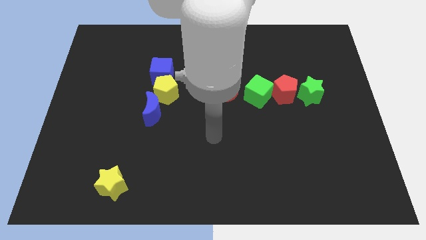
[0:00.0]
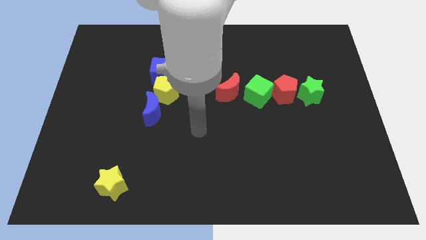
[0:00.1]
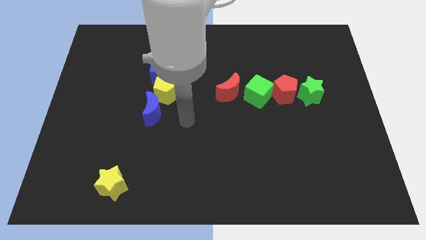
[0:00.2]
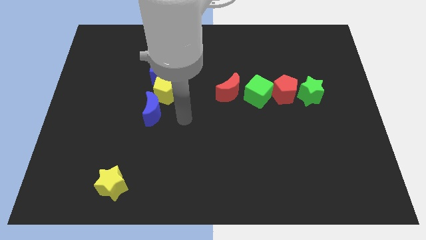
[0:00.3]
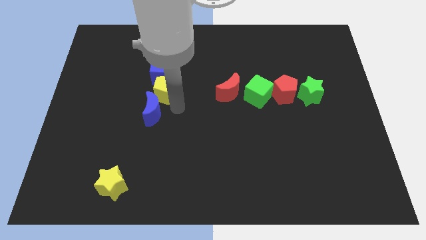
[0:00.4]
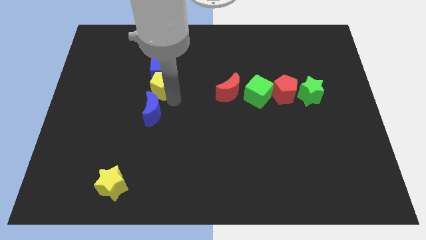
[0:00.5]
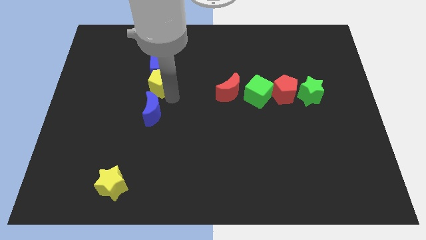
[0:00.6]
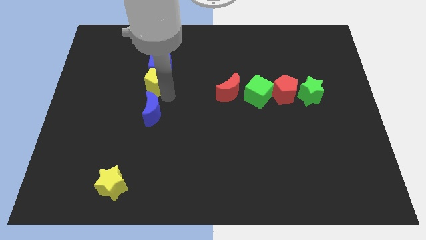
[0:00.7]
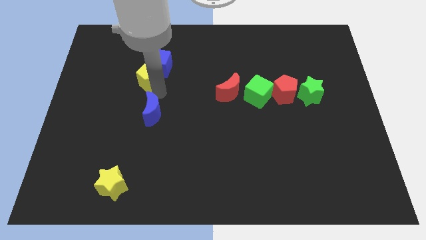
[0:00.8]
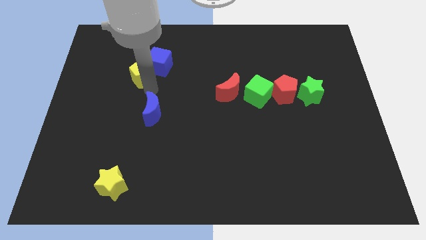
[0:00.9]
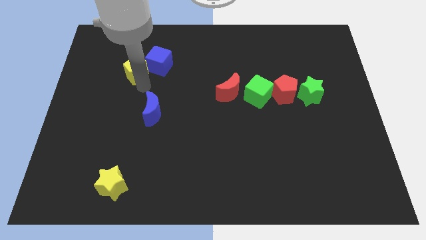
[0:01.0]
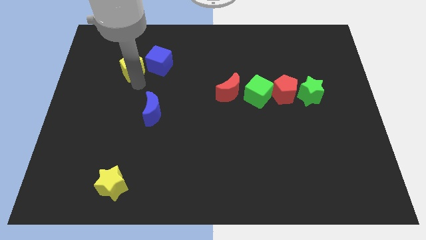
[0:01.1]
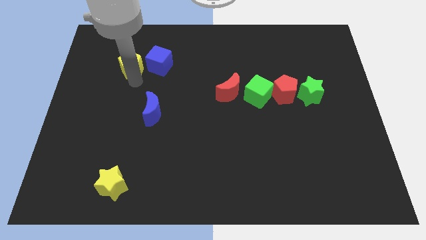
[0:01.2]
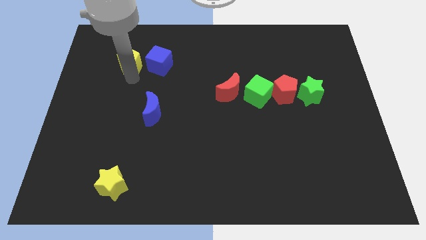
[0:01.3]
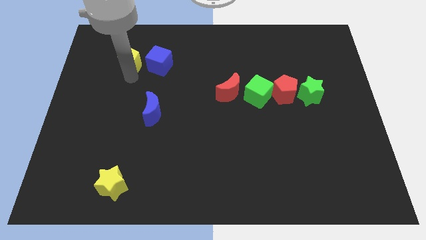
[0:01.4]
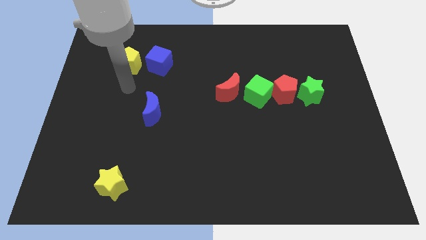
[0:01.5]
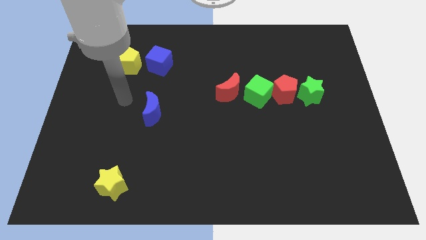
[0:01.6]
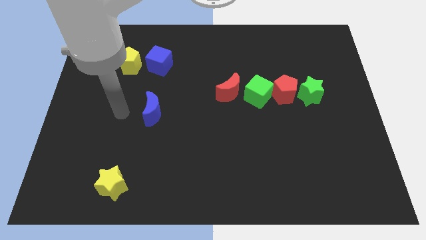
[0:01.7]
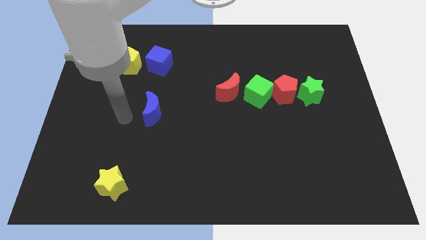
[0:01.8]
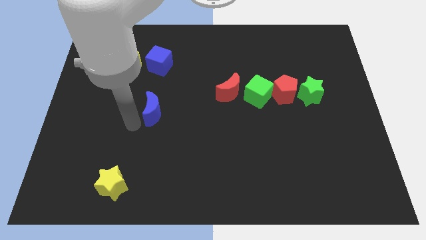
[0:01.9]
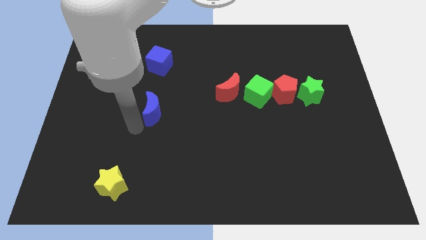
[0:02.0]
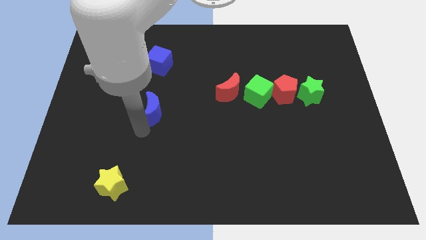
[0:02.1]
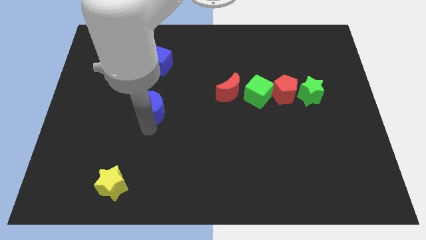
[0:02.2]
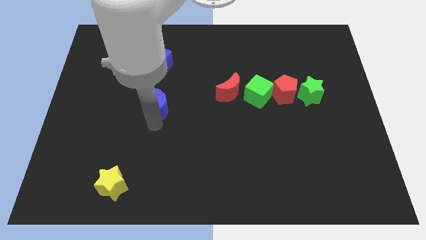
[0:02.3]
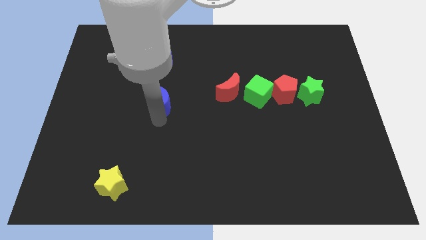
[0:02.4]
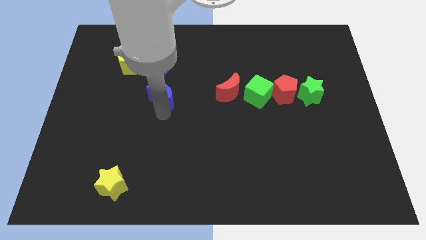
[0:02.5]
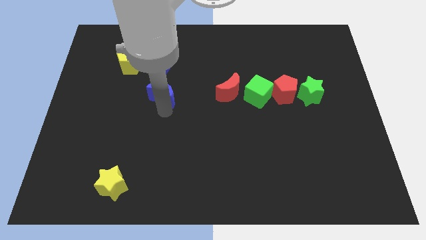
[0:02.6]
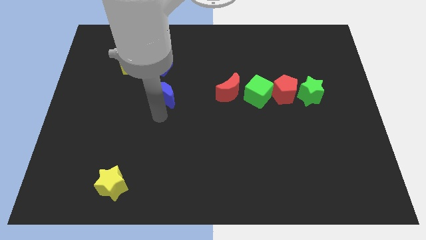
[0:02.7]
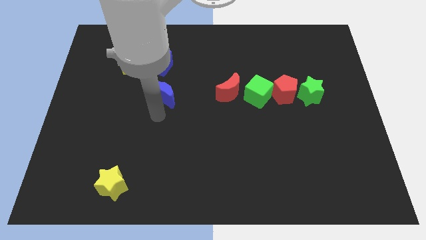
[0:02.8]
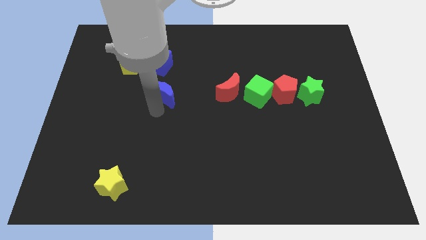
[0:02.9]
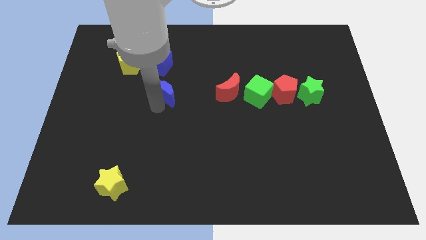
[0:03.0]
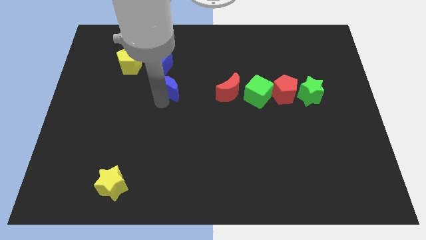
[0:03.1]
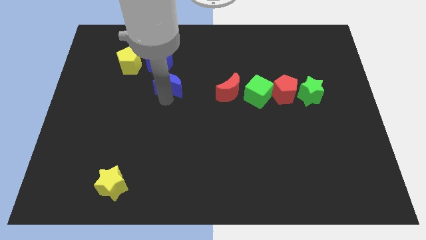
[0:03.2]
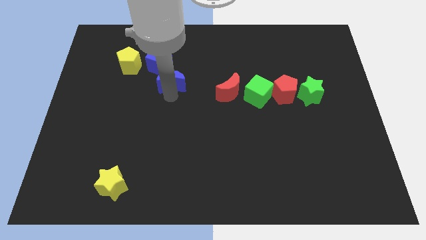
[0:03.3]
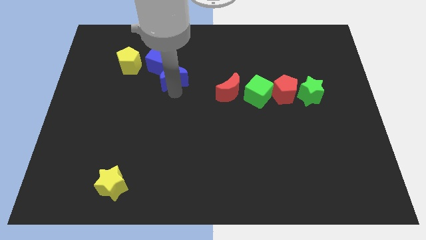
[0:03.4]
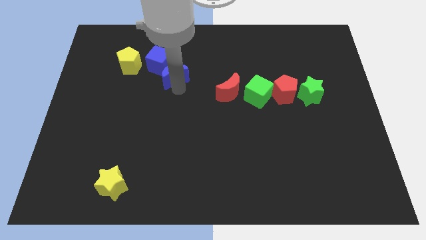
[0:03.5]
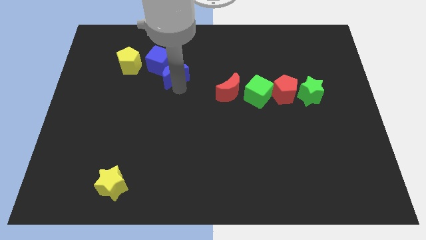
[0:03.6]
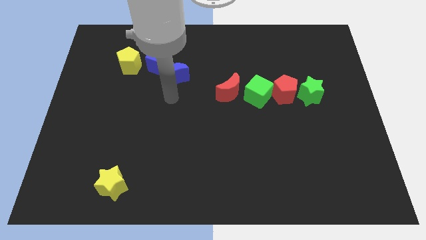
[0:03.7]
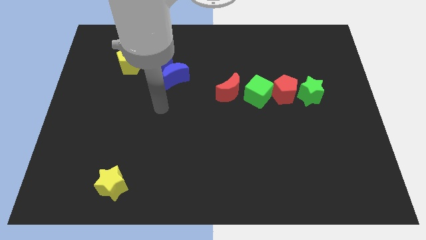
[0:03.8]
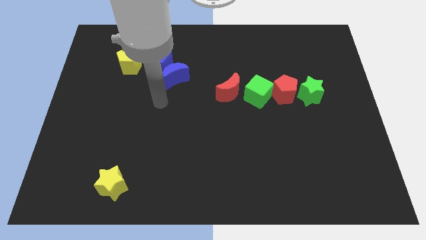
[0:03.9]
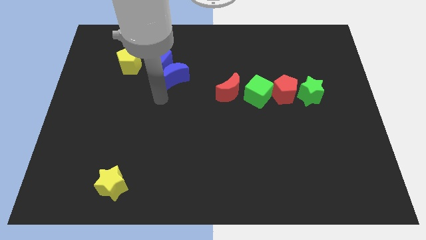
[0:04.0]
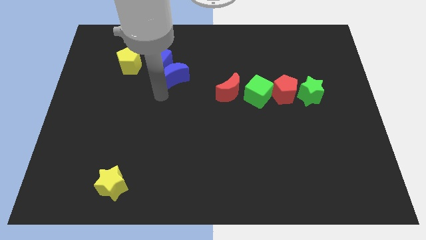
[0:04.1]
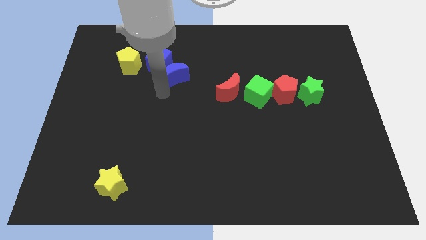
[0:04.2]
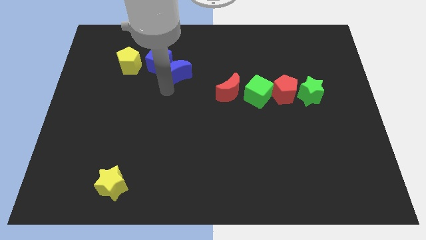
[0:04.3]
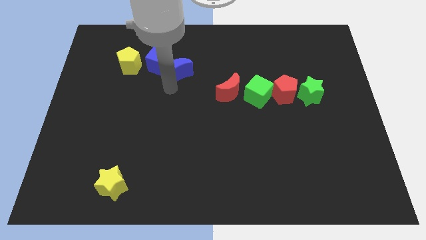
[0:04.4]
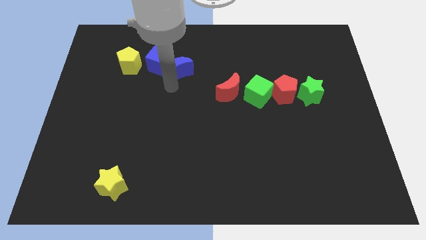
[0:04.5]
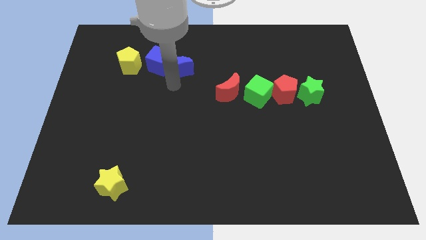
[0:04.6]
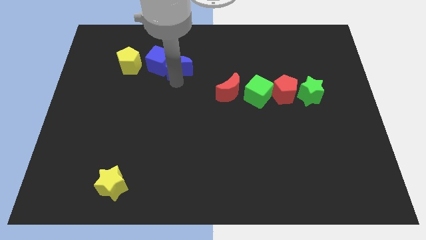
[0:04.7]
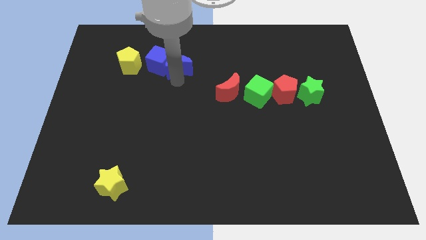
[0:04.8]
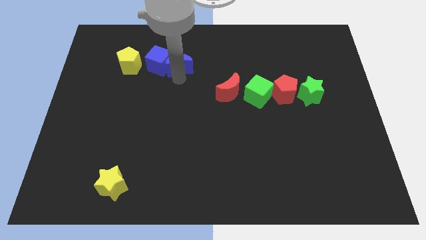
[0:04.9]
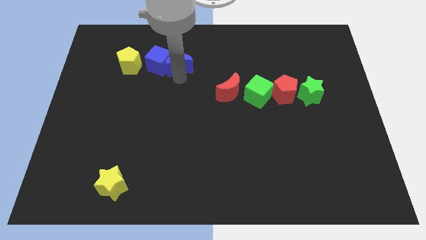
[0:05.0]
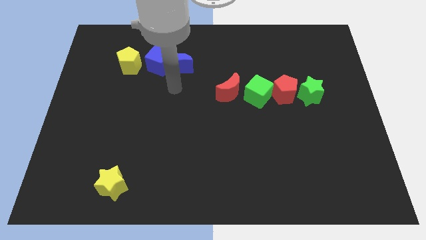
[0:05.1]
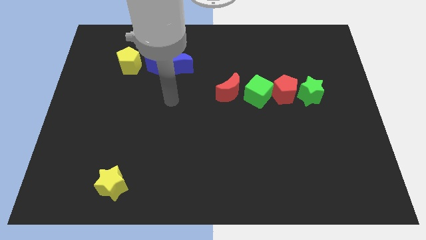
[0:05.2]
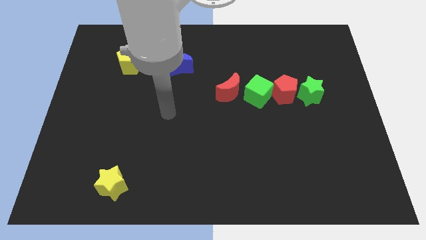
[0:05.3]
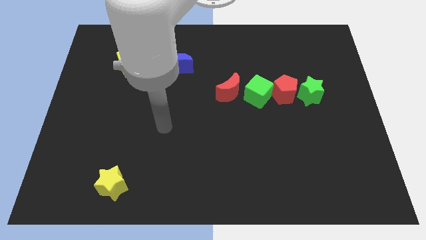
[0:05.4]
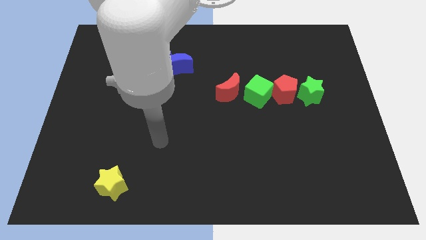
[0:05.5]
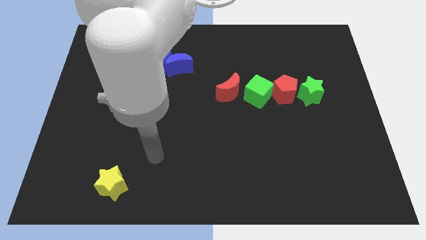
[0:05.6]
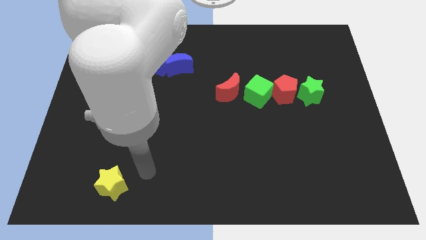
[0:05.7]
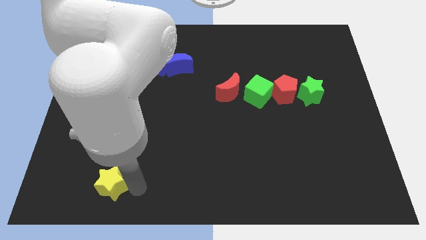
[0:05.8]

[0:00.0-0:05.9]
place blue moon beside the blue cube

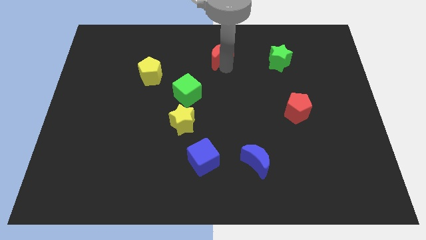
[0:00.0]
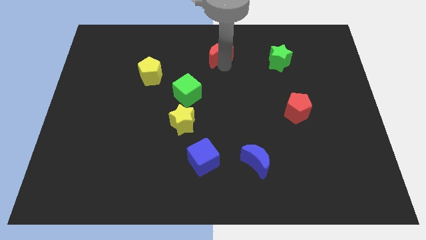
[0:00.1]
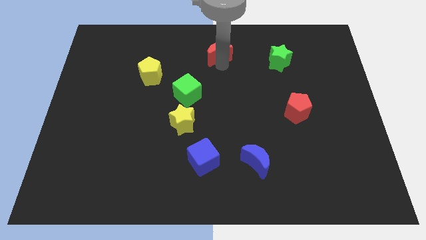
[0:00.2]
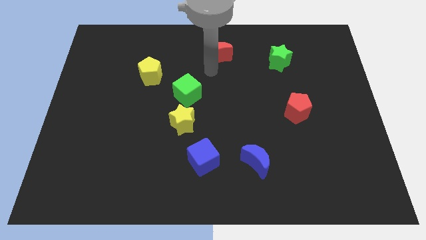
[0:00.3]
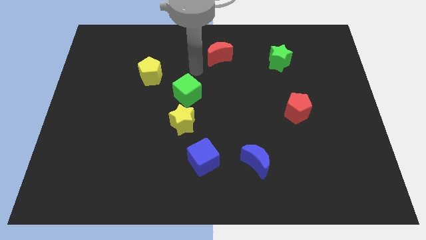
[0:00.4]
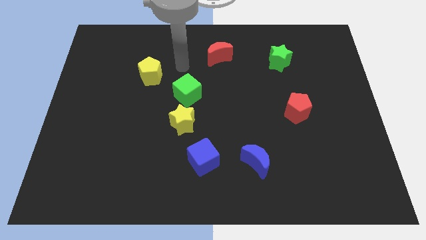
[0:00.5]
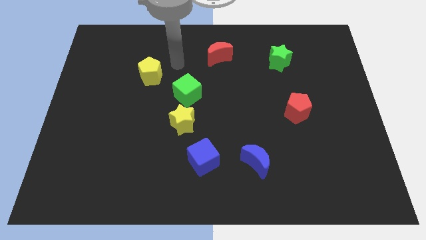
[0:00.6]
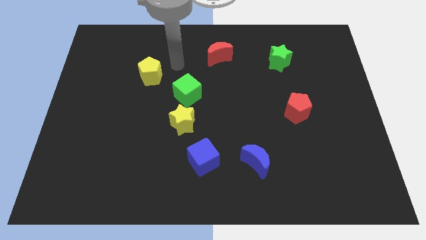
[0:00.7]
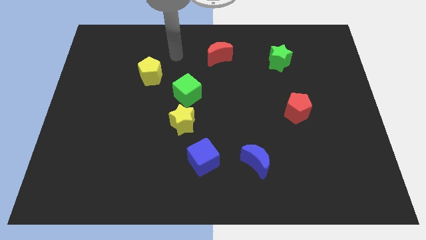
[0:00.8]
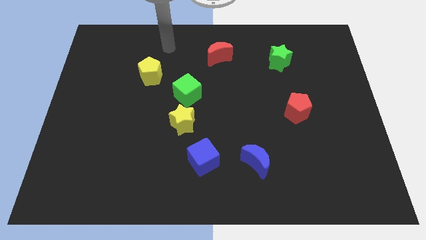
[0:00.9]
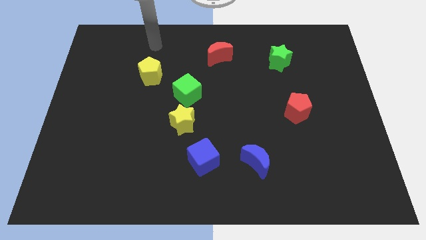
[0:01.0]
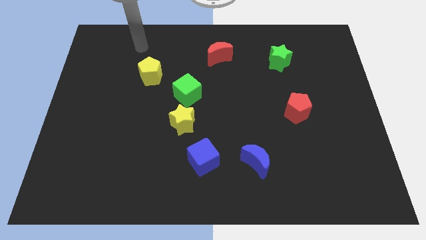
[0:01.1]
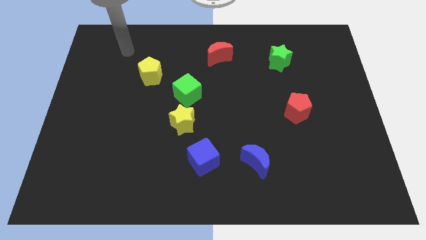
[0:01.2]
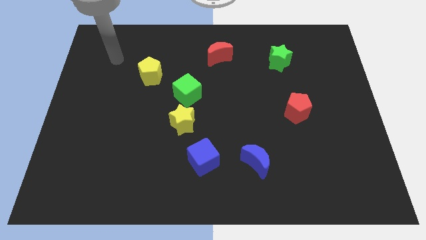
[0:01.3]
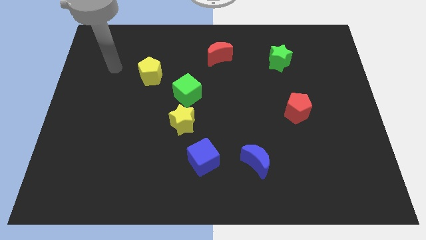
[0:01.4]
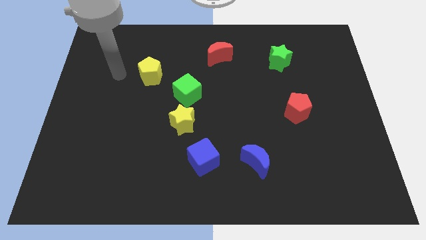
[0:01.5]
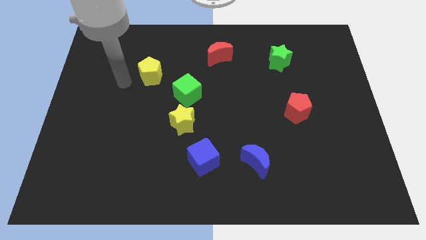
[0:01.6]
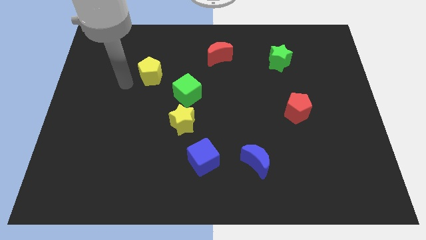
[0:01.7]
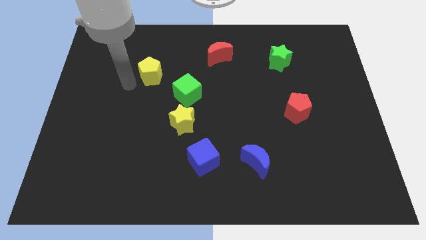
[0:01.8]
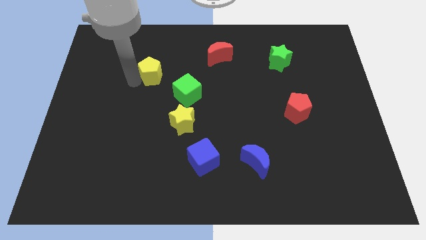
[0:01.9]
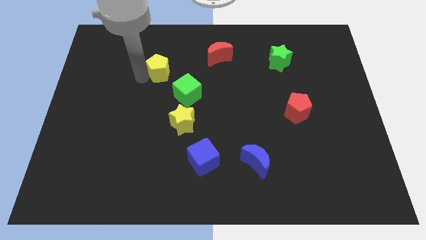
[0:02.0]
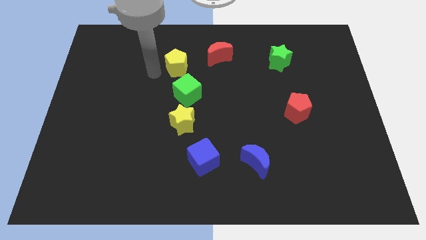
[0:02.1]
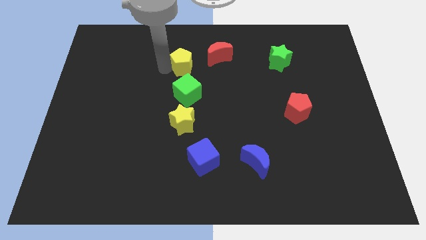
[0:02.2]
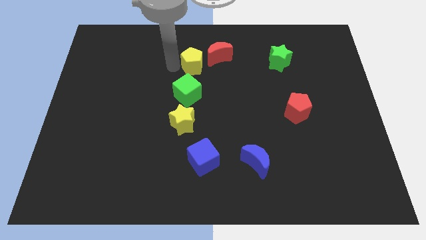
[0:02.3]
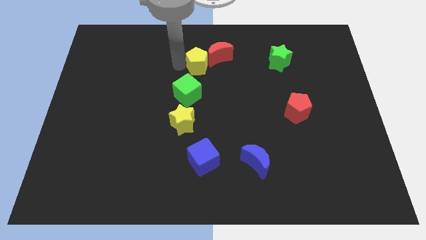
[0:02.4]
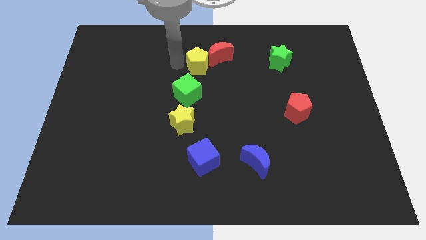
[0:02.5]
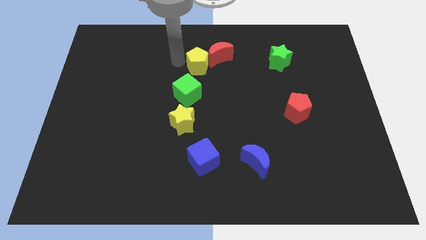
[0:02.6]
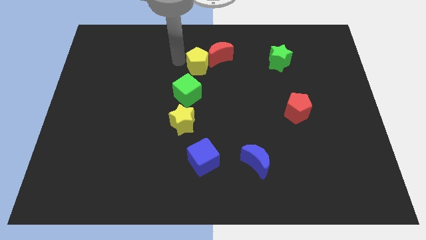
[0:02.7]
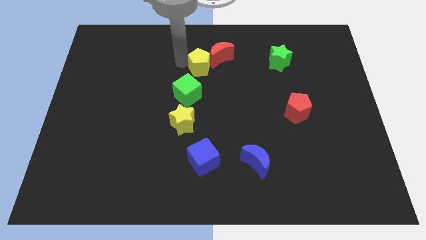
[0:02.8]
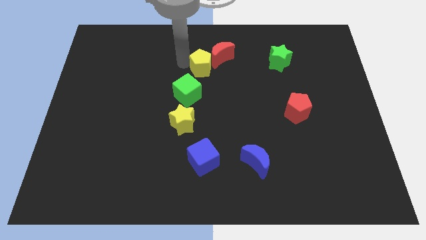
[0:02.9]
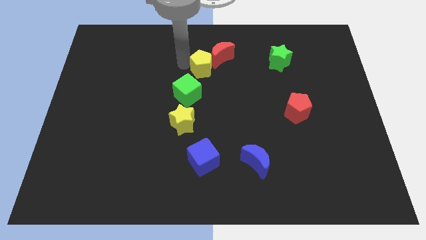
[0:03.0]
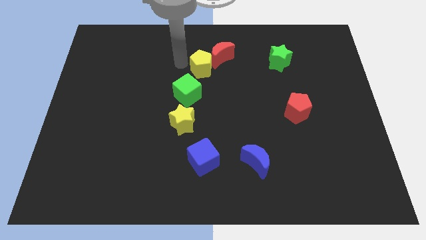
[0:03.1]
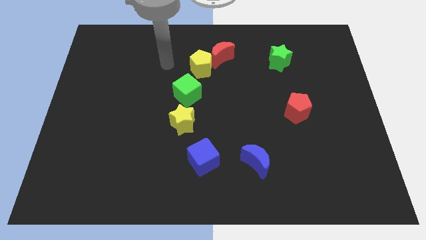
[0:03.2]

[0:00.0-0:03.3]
move the yellow pentagon to the top right of the green cube
